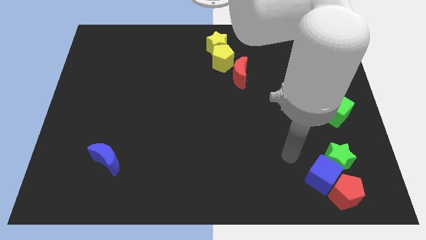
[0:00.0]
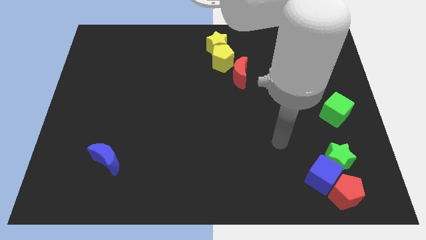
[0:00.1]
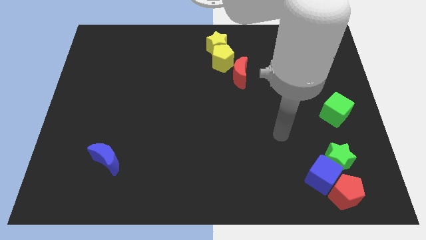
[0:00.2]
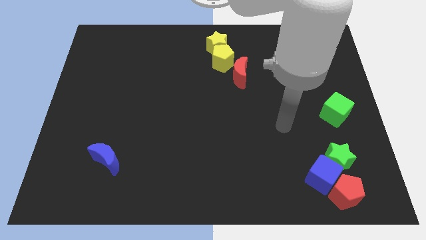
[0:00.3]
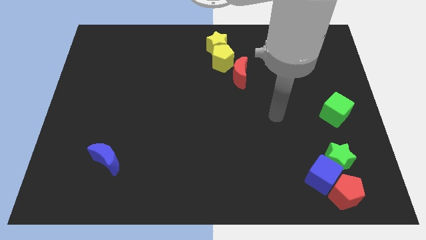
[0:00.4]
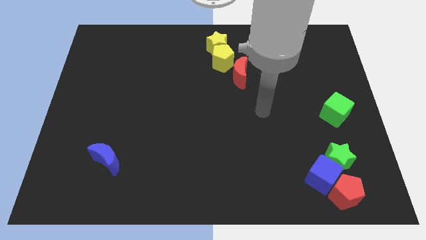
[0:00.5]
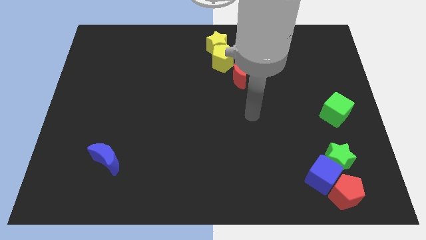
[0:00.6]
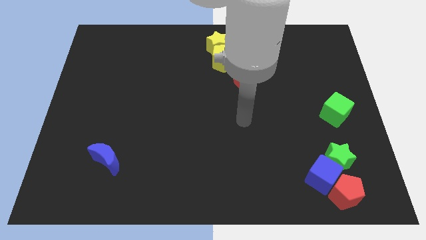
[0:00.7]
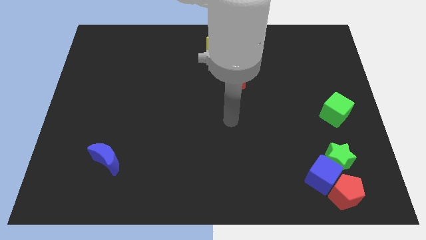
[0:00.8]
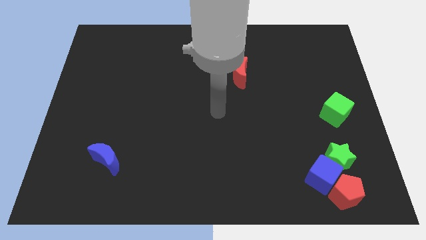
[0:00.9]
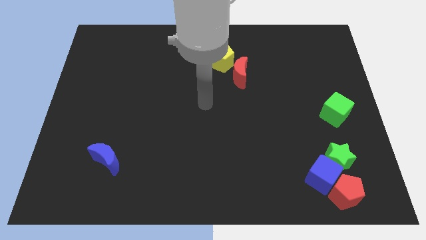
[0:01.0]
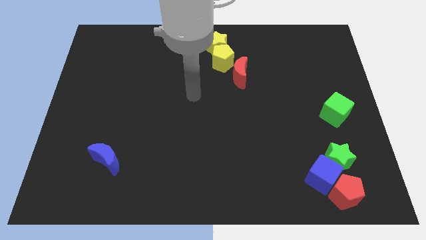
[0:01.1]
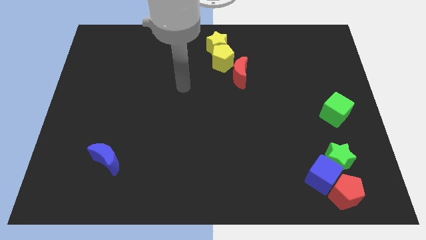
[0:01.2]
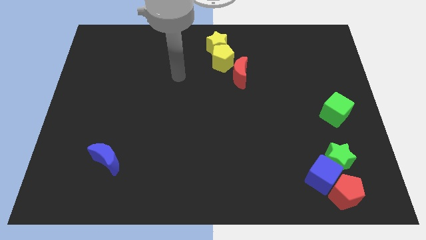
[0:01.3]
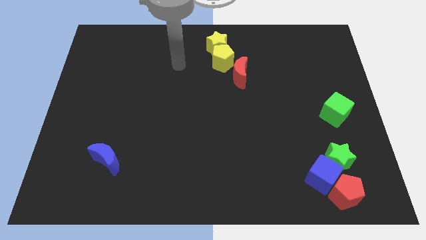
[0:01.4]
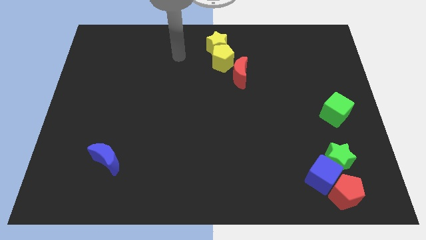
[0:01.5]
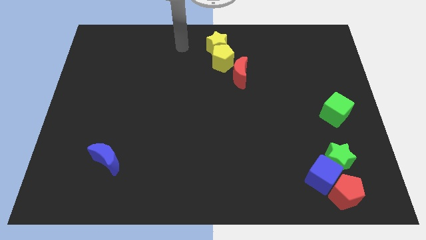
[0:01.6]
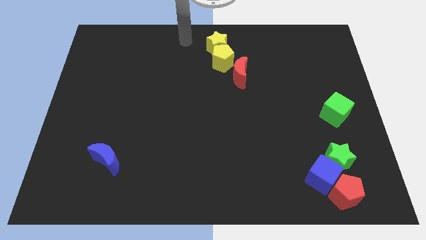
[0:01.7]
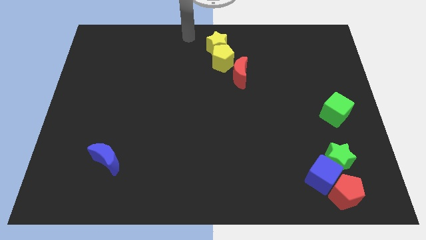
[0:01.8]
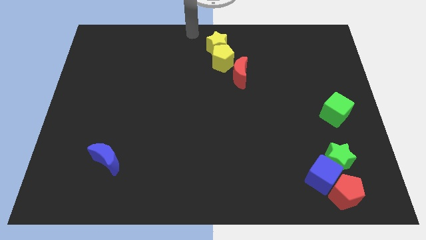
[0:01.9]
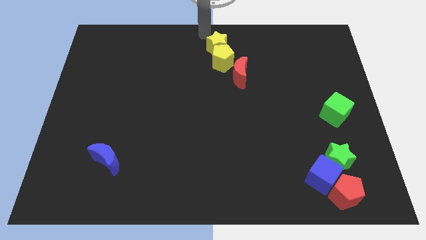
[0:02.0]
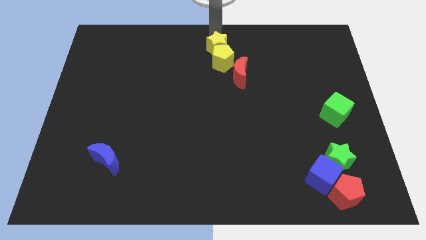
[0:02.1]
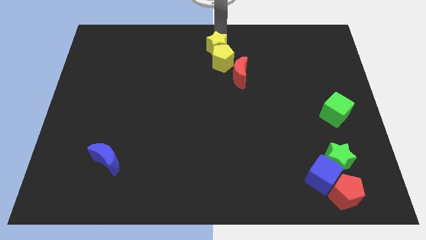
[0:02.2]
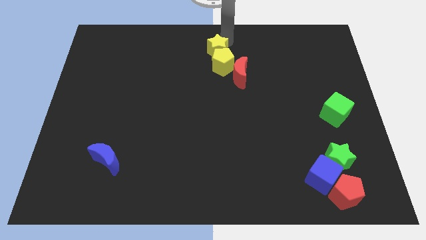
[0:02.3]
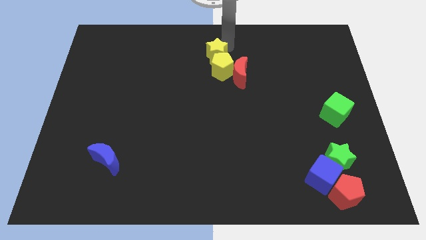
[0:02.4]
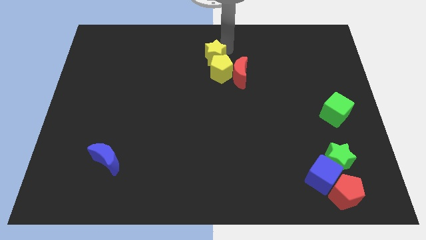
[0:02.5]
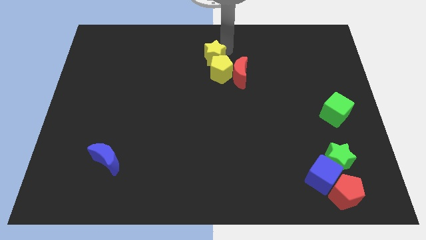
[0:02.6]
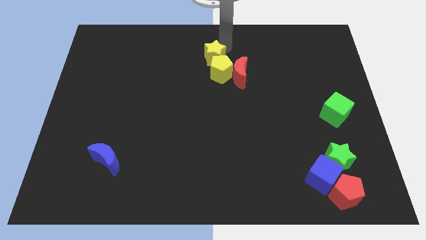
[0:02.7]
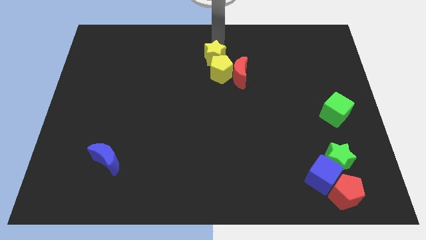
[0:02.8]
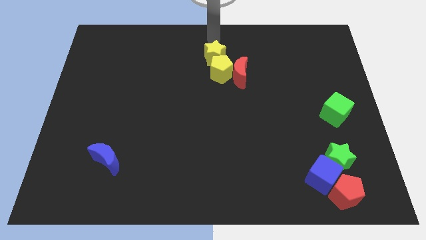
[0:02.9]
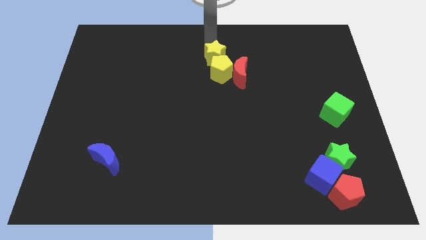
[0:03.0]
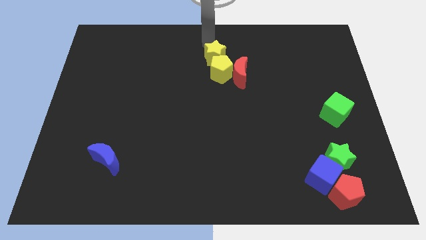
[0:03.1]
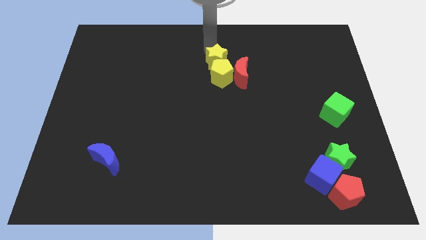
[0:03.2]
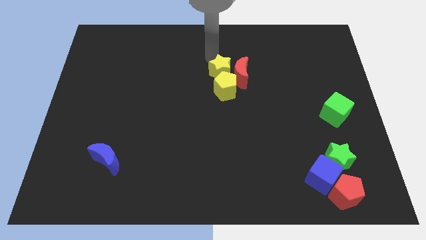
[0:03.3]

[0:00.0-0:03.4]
push the yellow star slightly down

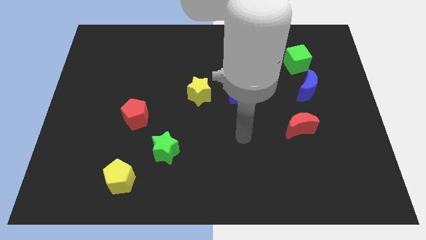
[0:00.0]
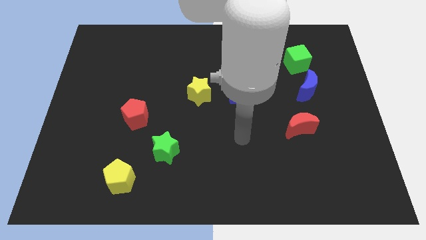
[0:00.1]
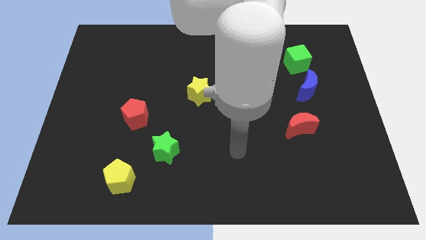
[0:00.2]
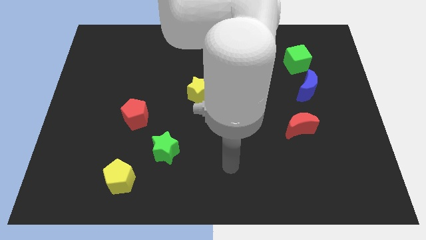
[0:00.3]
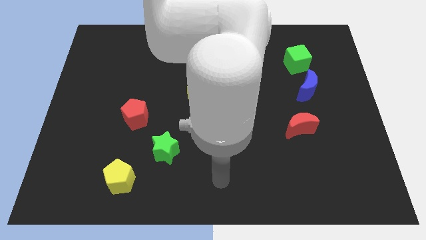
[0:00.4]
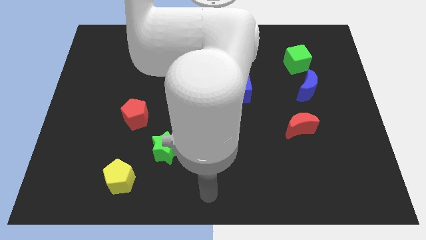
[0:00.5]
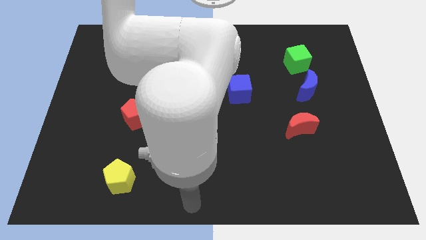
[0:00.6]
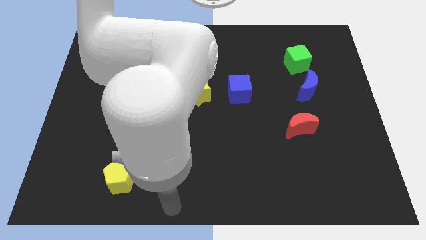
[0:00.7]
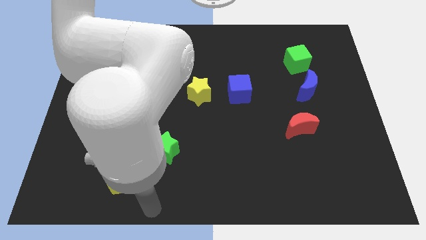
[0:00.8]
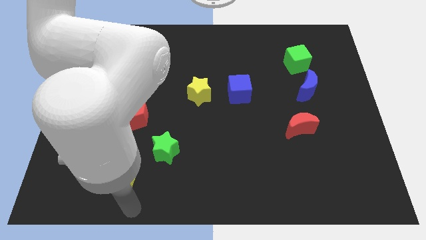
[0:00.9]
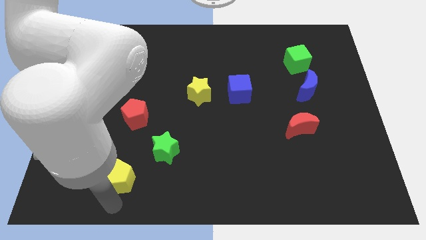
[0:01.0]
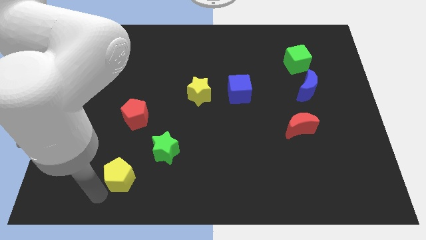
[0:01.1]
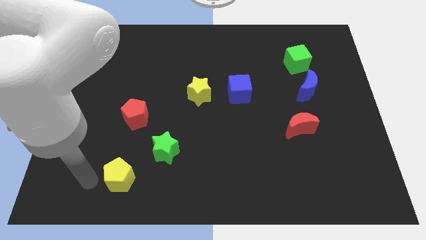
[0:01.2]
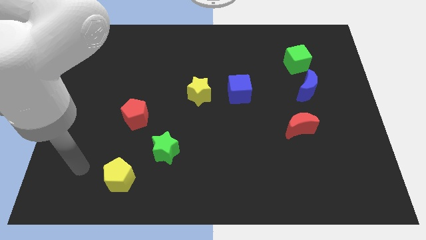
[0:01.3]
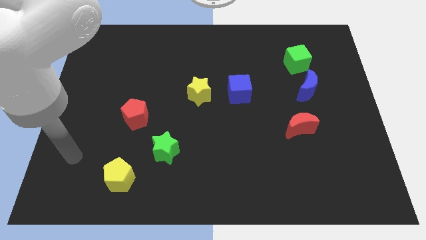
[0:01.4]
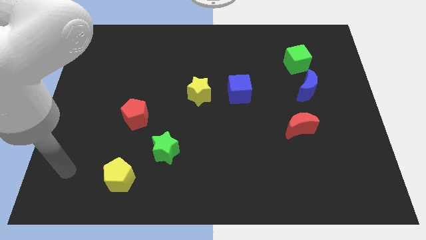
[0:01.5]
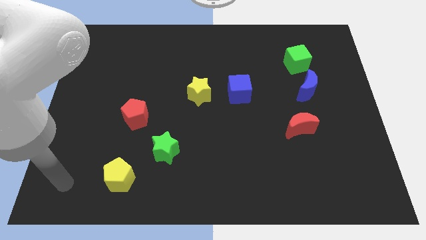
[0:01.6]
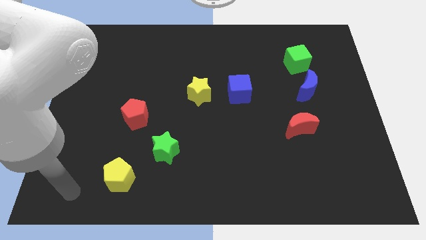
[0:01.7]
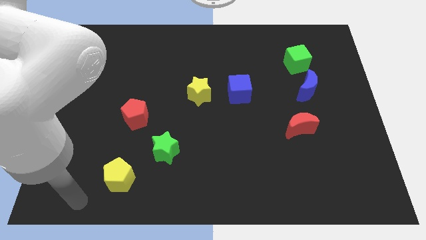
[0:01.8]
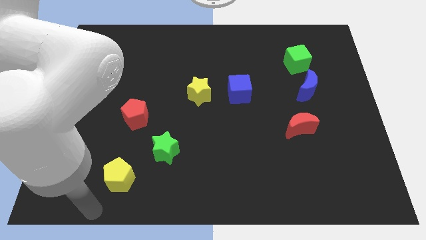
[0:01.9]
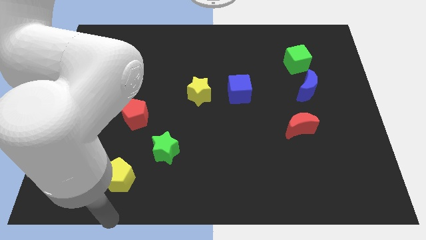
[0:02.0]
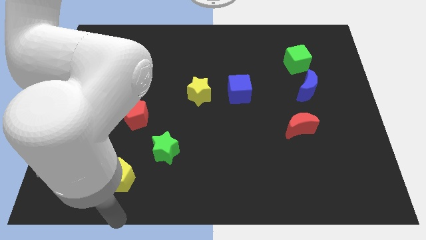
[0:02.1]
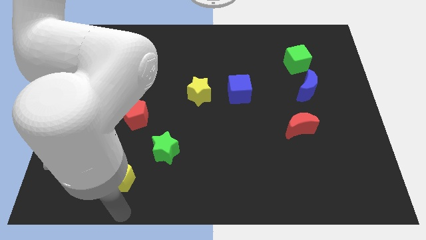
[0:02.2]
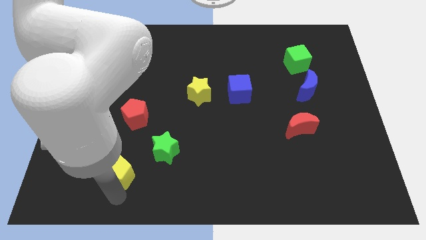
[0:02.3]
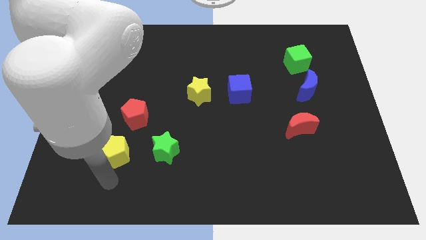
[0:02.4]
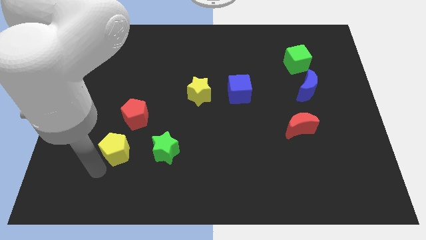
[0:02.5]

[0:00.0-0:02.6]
push the yellow pentagon

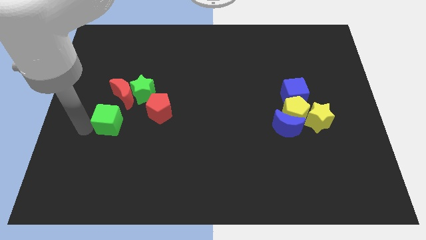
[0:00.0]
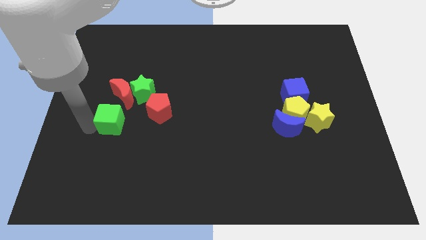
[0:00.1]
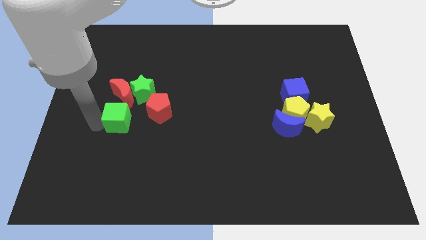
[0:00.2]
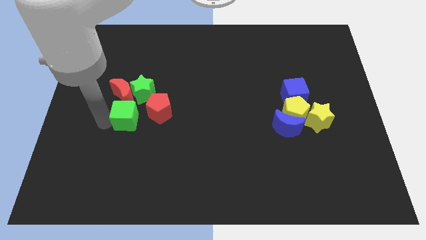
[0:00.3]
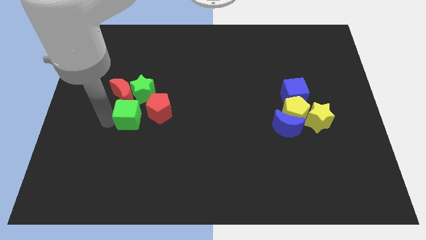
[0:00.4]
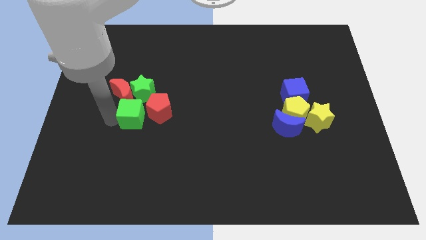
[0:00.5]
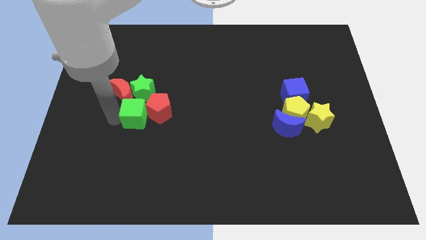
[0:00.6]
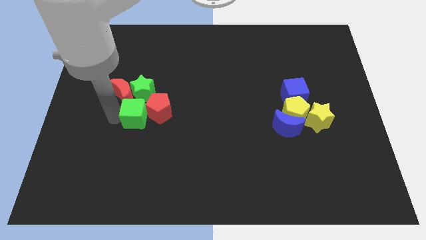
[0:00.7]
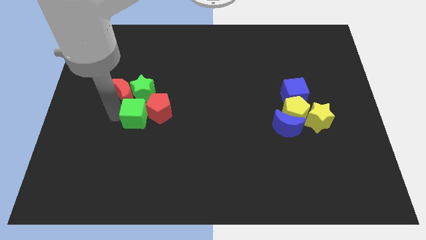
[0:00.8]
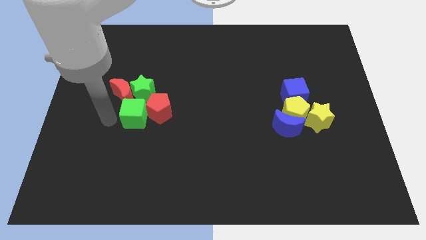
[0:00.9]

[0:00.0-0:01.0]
push the green cube to the left of the red pentagon

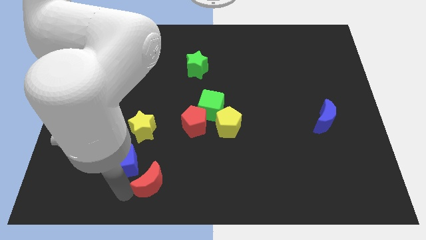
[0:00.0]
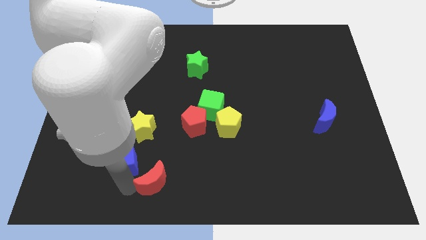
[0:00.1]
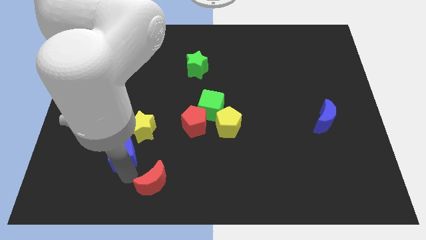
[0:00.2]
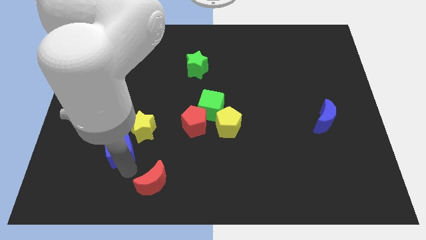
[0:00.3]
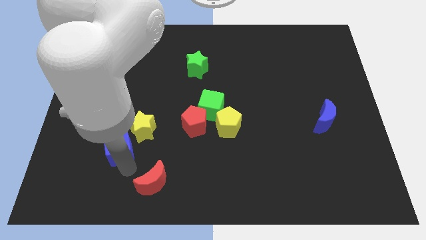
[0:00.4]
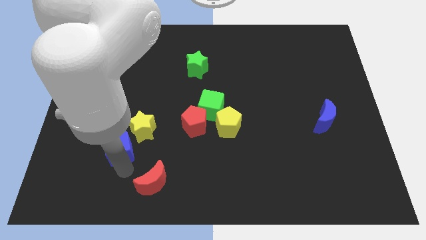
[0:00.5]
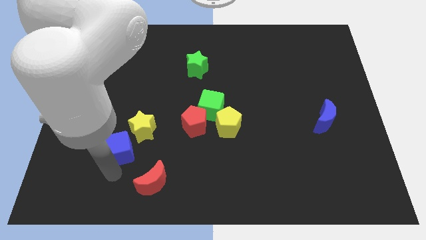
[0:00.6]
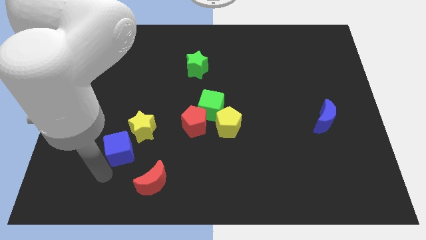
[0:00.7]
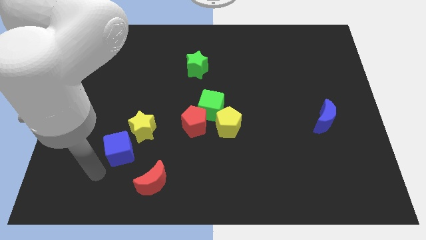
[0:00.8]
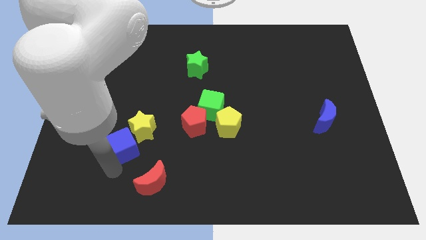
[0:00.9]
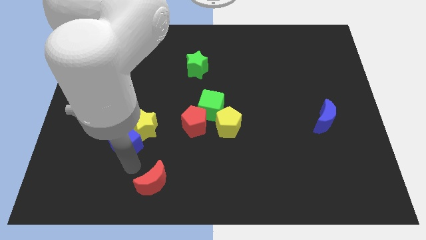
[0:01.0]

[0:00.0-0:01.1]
move blue cube close to yellow star

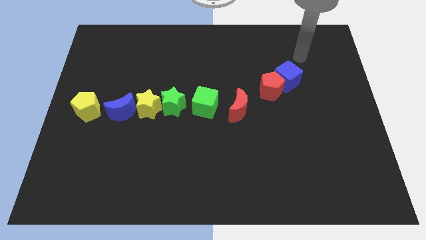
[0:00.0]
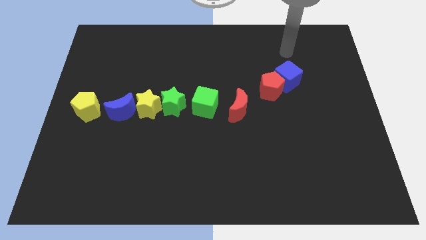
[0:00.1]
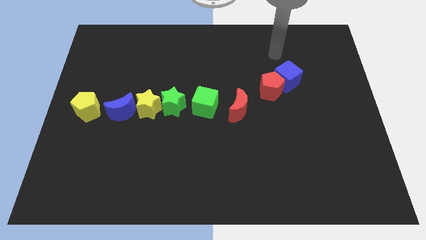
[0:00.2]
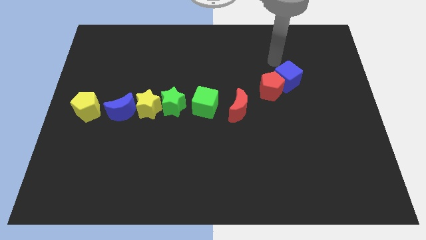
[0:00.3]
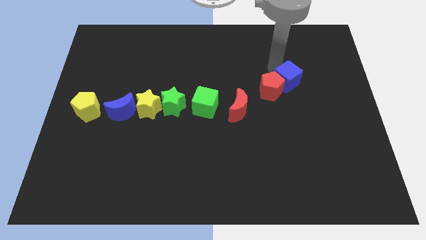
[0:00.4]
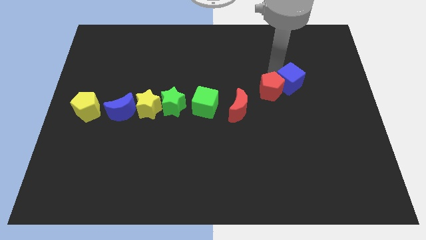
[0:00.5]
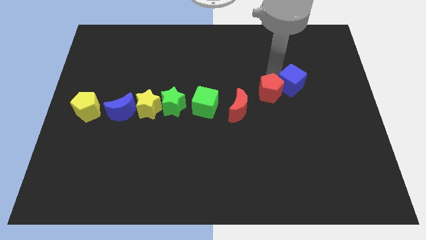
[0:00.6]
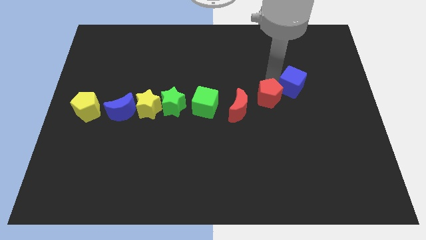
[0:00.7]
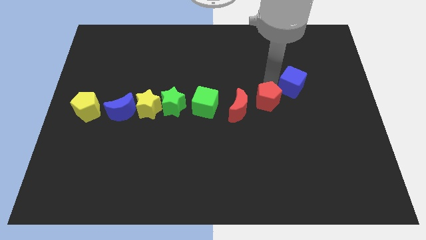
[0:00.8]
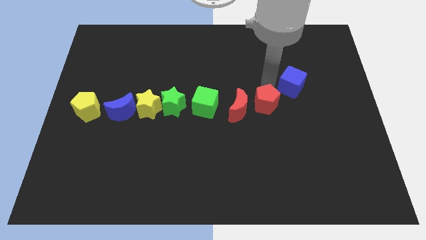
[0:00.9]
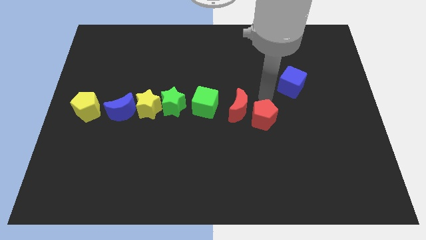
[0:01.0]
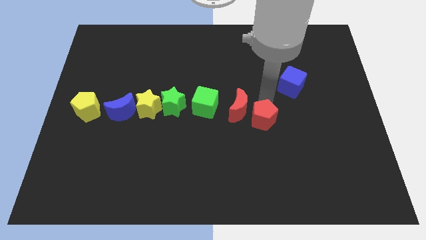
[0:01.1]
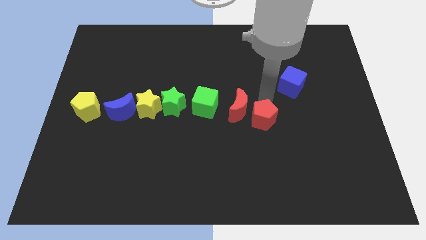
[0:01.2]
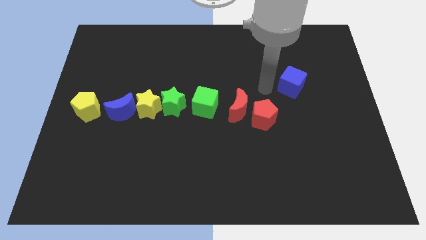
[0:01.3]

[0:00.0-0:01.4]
separate red pentagon from the blue cube
